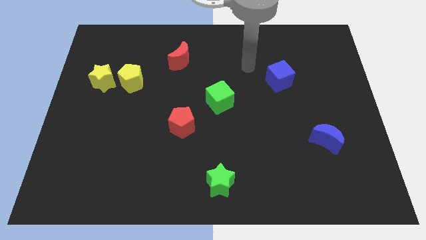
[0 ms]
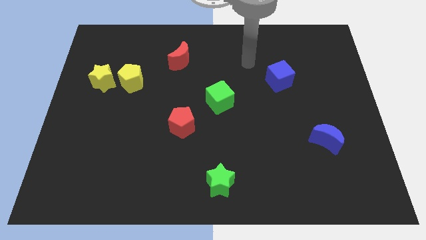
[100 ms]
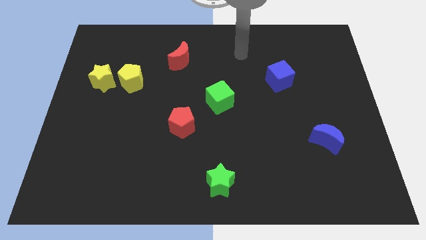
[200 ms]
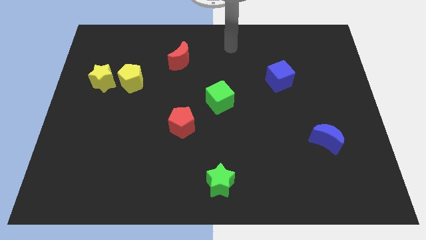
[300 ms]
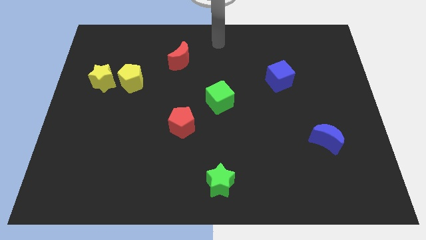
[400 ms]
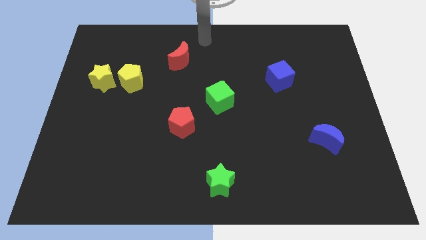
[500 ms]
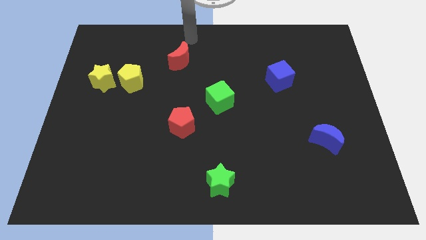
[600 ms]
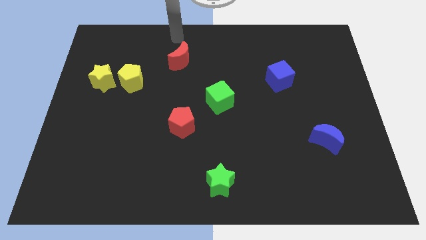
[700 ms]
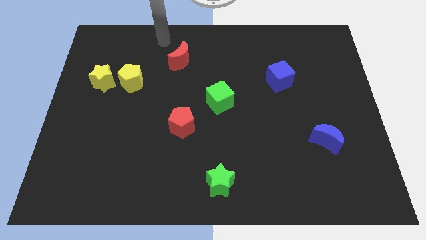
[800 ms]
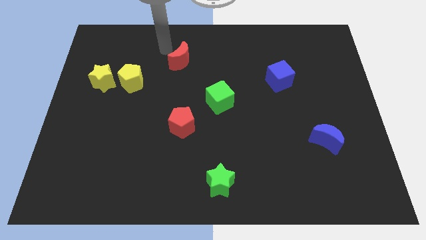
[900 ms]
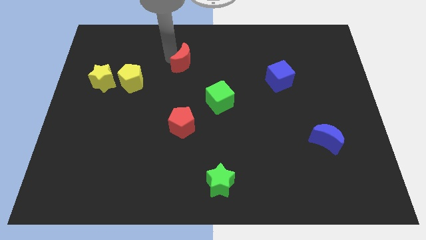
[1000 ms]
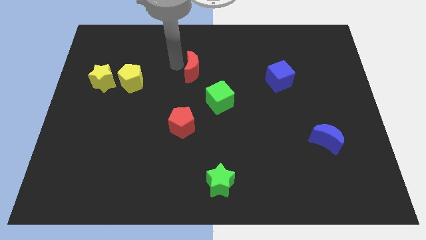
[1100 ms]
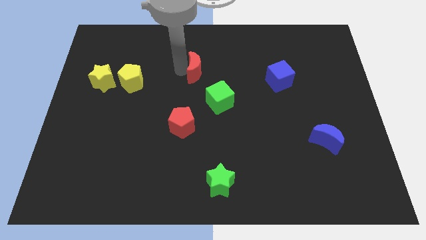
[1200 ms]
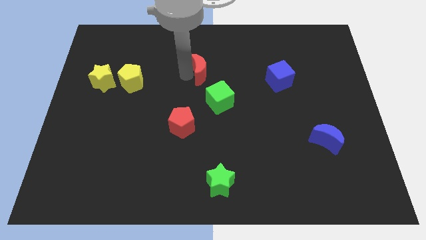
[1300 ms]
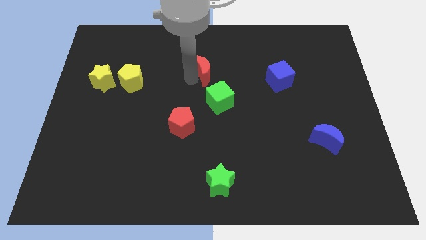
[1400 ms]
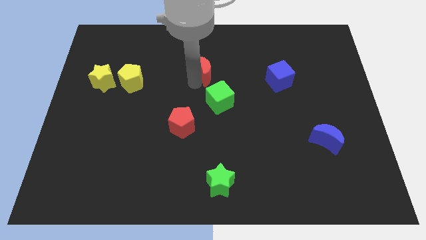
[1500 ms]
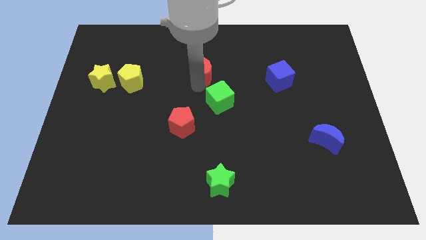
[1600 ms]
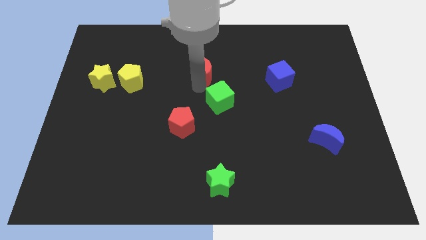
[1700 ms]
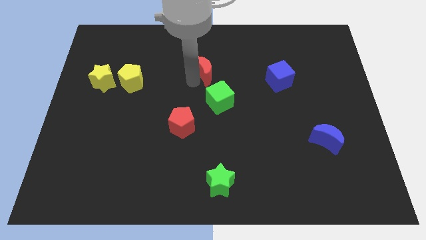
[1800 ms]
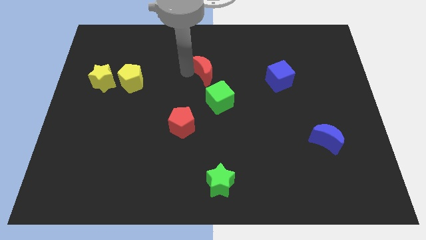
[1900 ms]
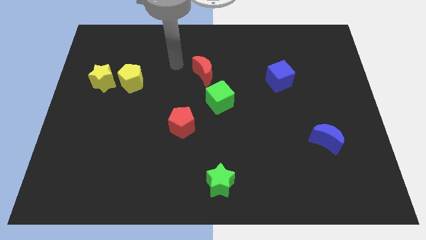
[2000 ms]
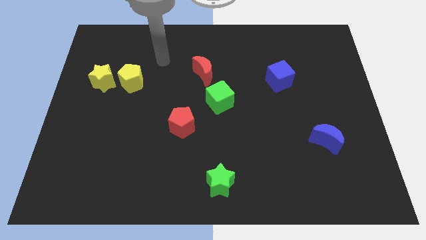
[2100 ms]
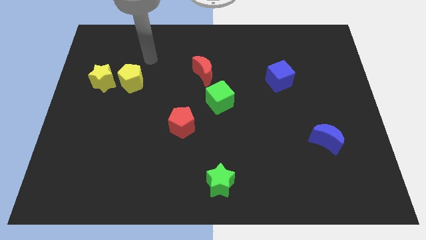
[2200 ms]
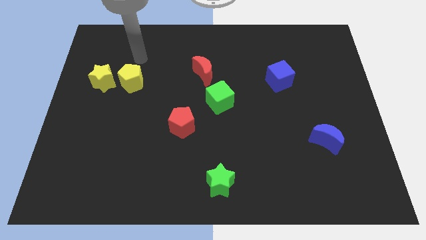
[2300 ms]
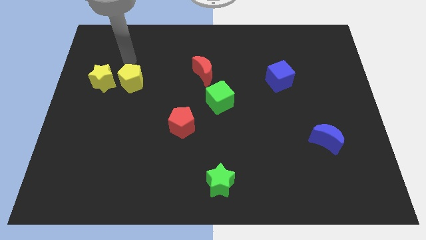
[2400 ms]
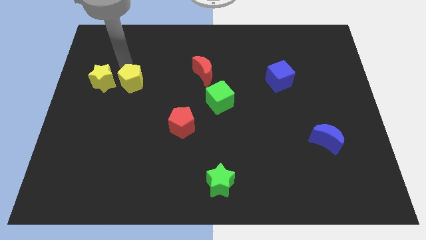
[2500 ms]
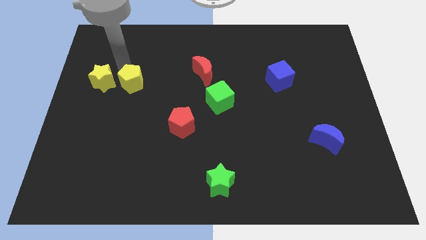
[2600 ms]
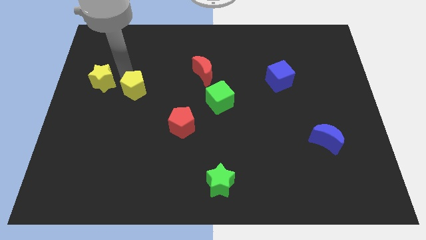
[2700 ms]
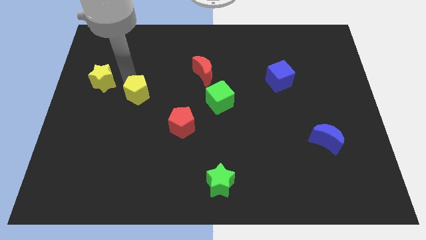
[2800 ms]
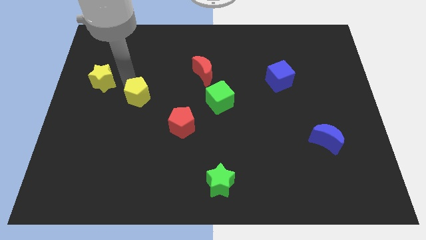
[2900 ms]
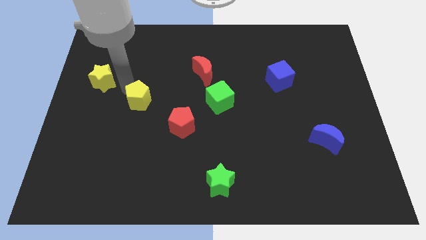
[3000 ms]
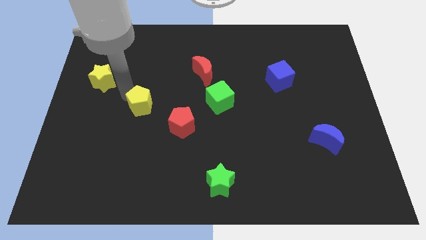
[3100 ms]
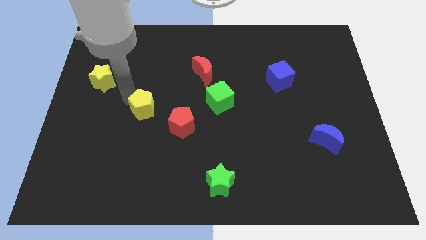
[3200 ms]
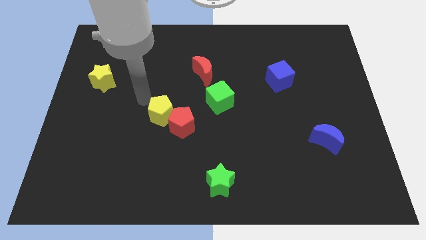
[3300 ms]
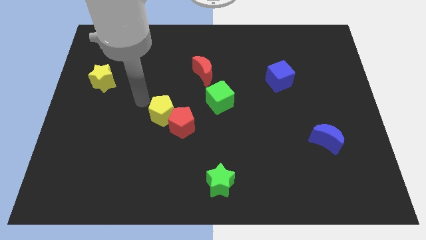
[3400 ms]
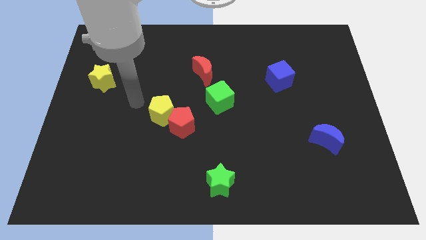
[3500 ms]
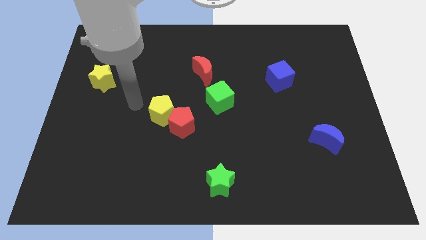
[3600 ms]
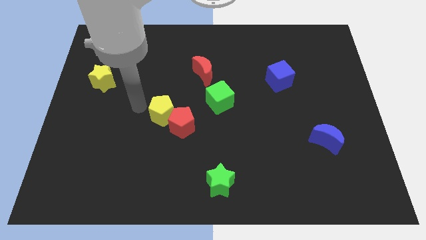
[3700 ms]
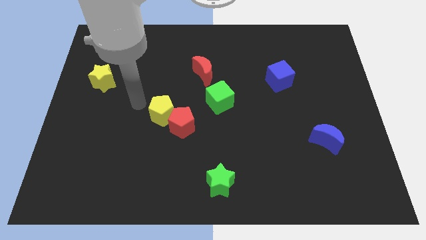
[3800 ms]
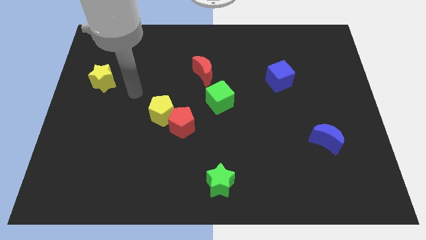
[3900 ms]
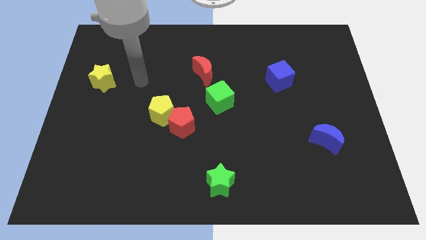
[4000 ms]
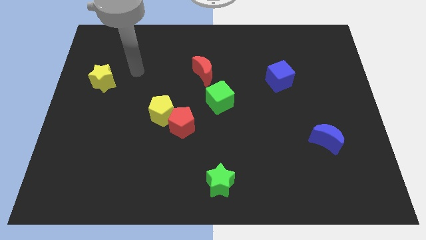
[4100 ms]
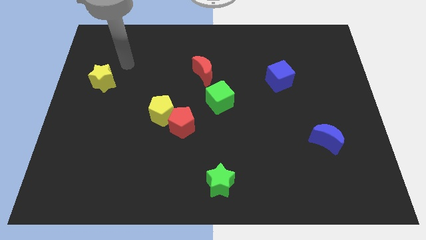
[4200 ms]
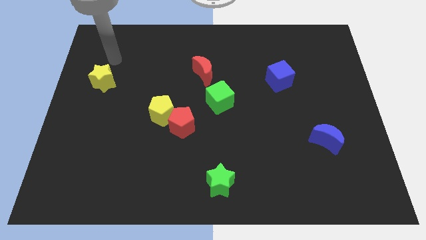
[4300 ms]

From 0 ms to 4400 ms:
separate the yellow pentagon from the yellow star

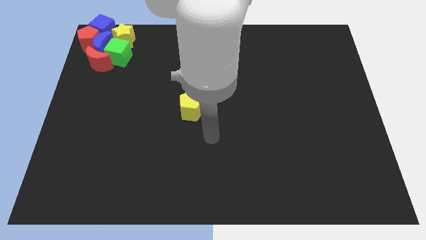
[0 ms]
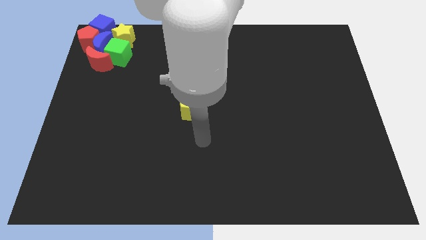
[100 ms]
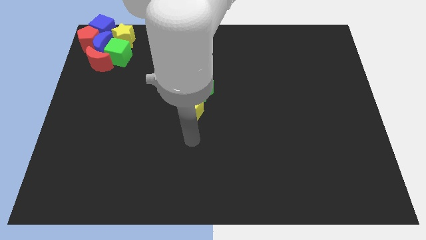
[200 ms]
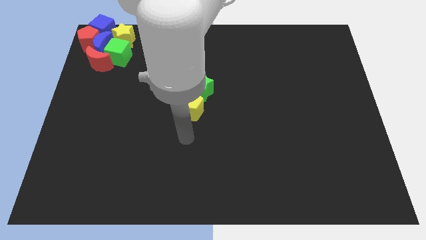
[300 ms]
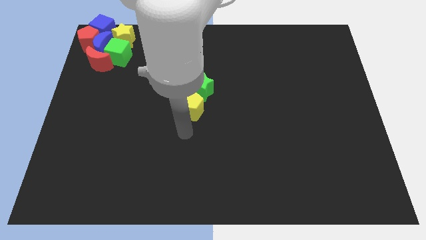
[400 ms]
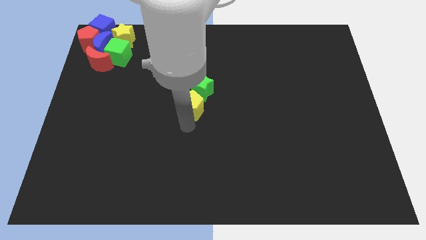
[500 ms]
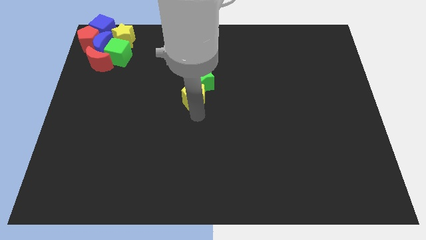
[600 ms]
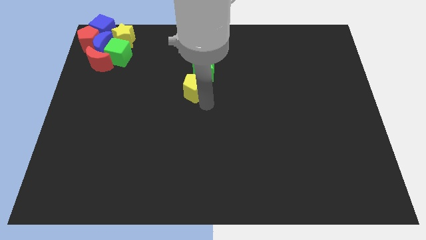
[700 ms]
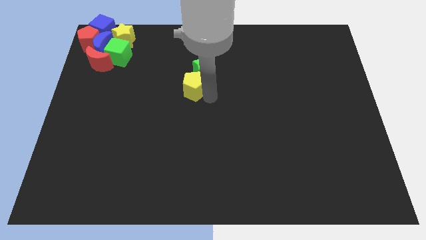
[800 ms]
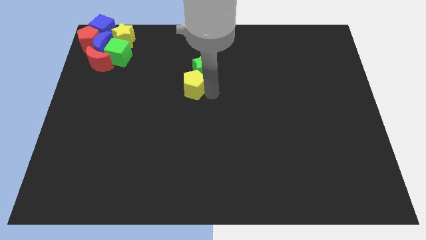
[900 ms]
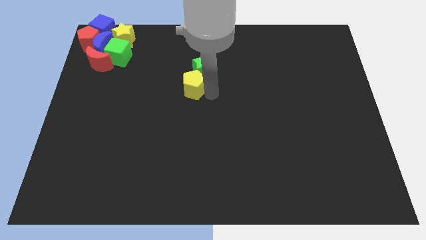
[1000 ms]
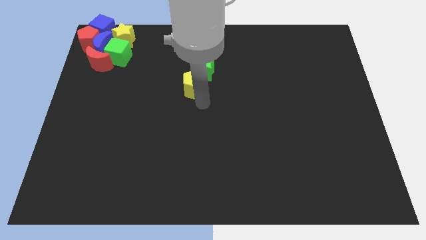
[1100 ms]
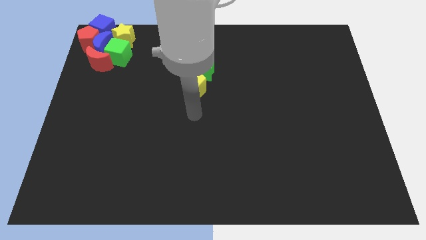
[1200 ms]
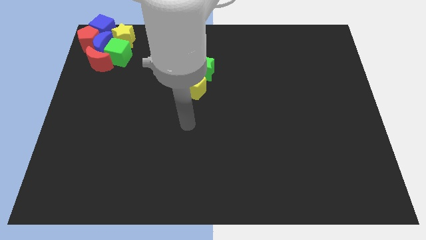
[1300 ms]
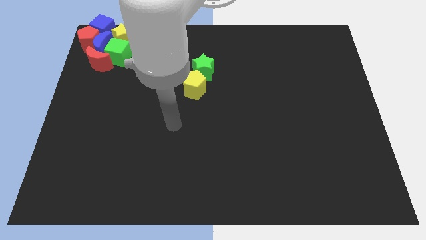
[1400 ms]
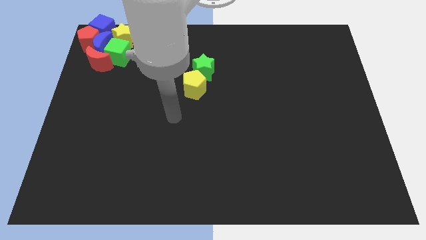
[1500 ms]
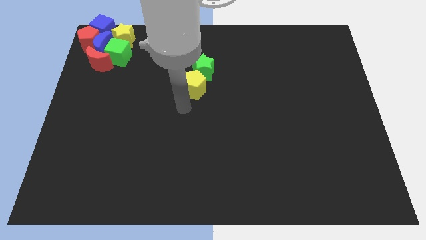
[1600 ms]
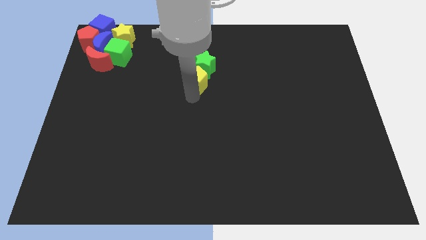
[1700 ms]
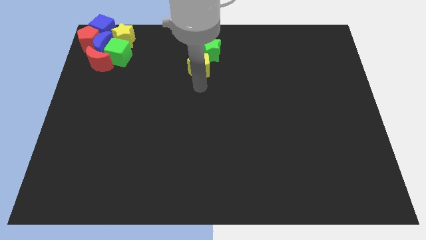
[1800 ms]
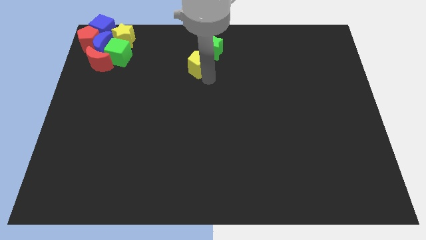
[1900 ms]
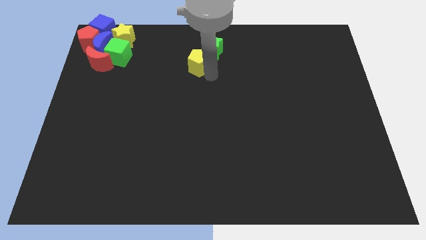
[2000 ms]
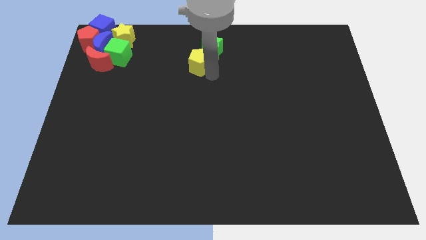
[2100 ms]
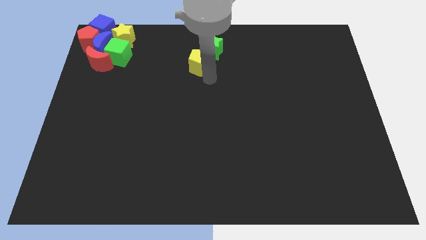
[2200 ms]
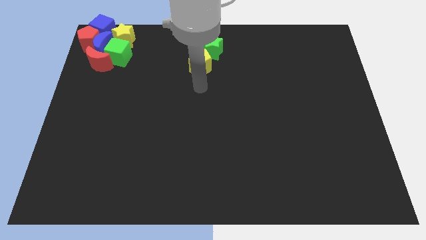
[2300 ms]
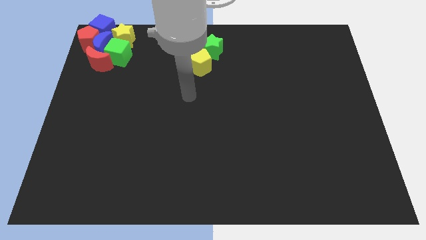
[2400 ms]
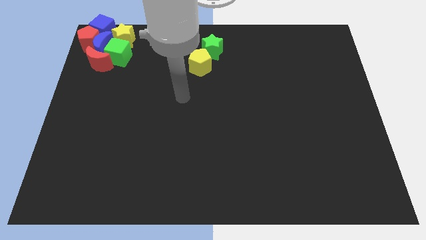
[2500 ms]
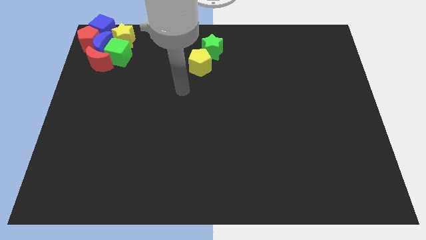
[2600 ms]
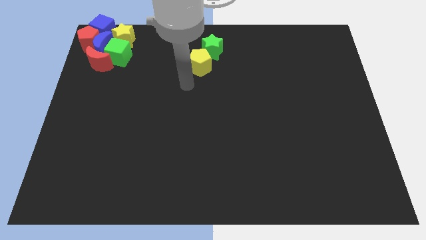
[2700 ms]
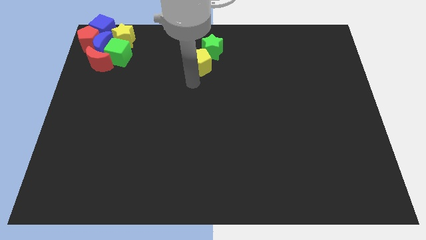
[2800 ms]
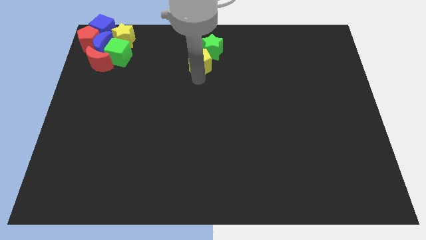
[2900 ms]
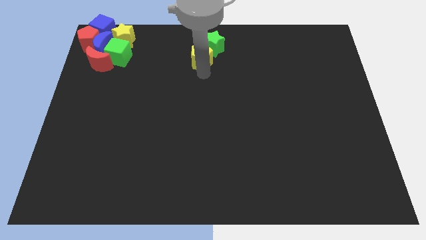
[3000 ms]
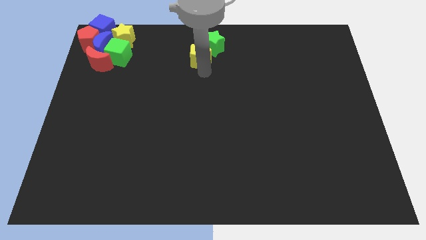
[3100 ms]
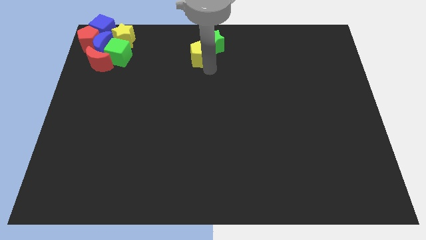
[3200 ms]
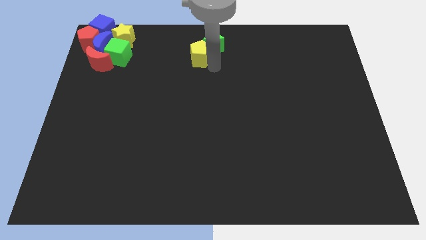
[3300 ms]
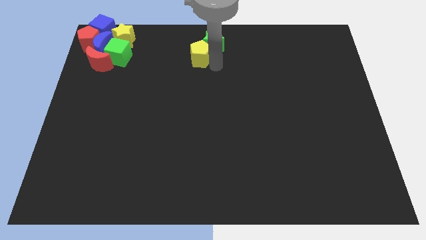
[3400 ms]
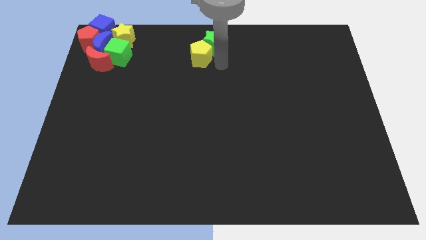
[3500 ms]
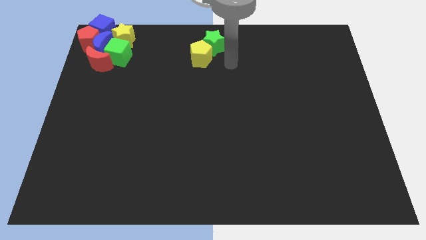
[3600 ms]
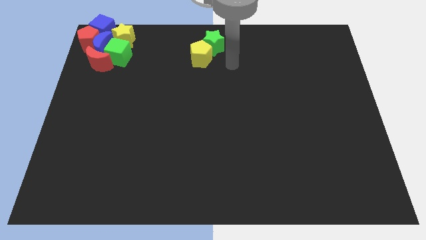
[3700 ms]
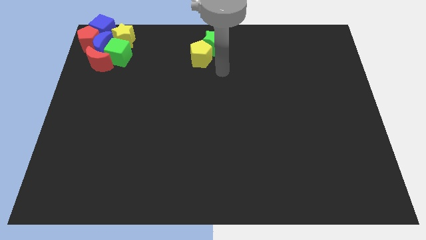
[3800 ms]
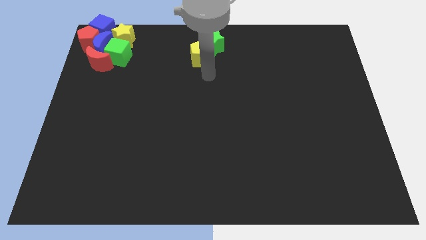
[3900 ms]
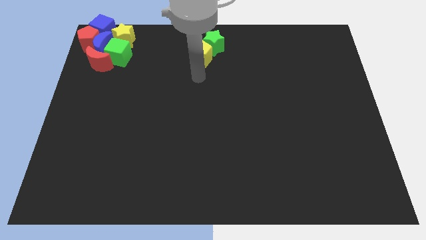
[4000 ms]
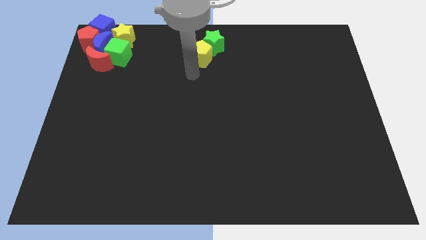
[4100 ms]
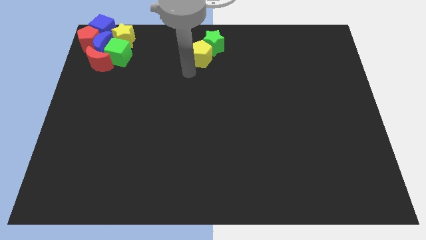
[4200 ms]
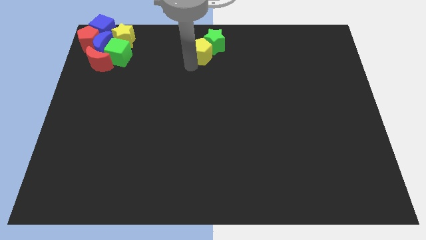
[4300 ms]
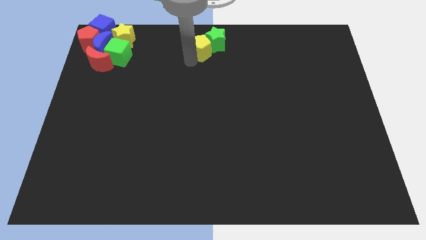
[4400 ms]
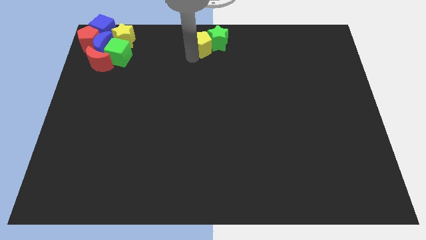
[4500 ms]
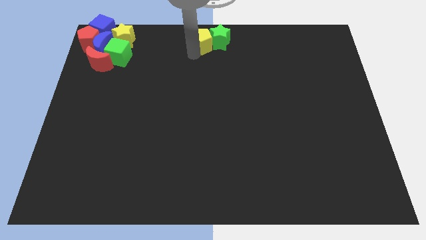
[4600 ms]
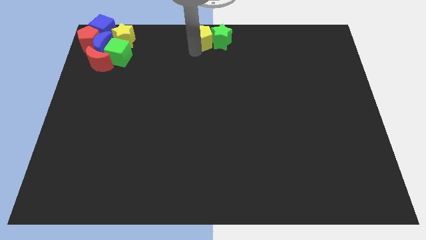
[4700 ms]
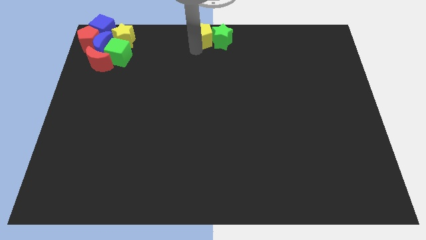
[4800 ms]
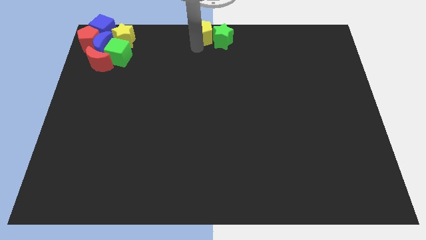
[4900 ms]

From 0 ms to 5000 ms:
move yellow pentagon along with green star towards the top centre of the board
